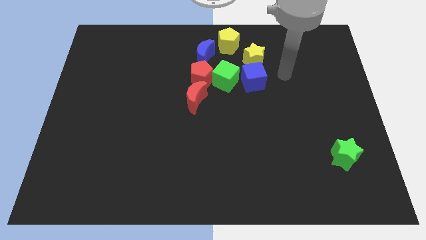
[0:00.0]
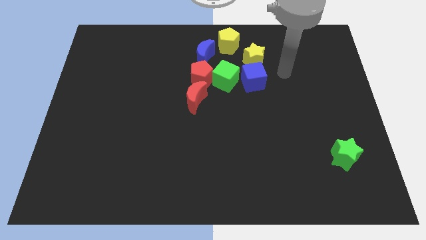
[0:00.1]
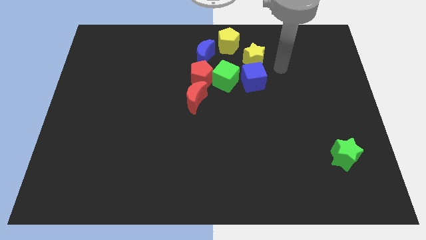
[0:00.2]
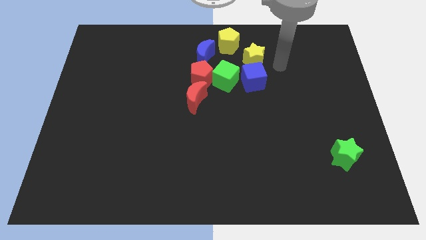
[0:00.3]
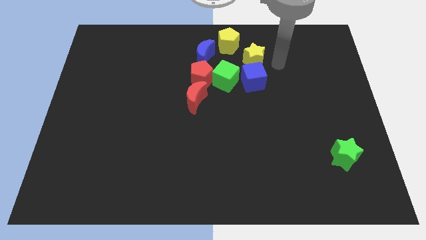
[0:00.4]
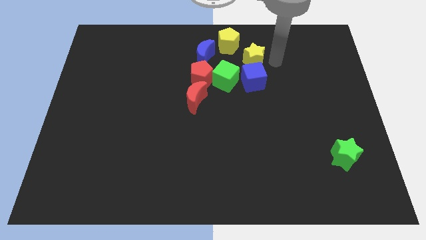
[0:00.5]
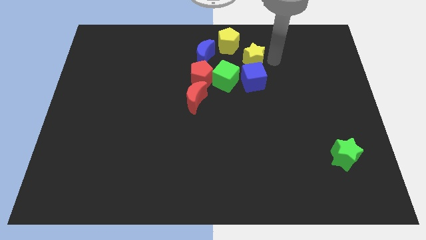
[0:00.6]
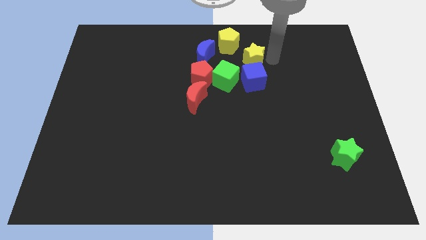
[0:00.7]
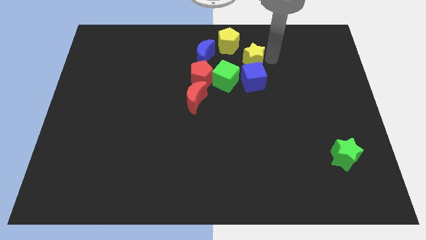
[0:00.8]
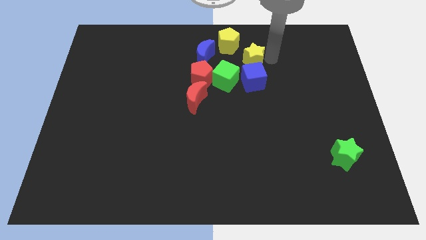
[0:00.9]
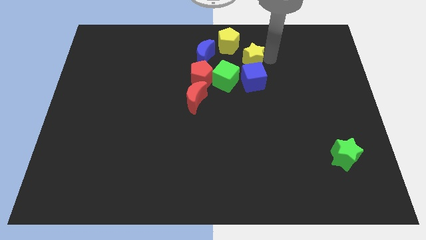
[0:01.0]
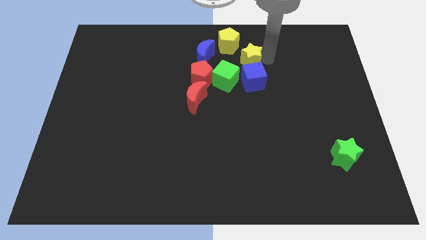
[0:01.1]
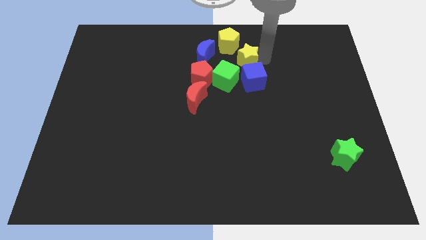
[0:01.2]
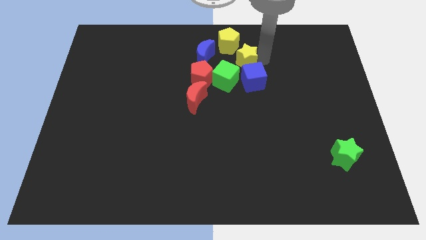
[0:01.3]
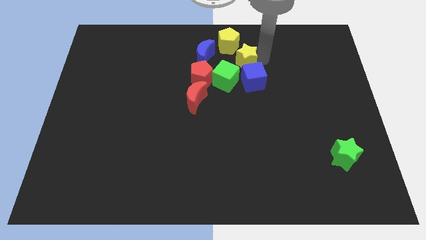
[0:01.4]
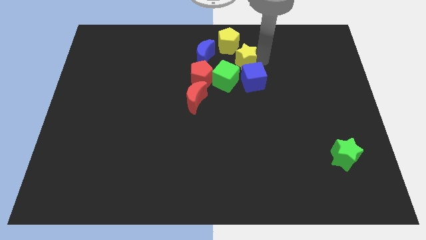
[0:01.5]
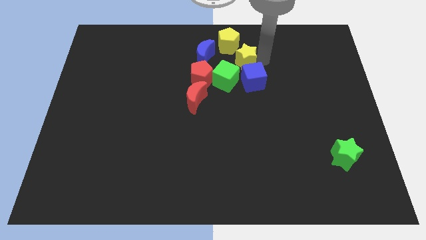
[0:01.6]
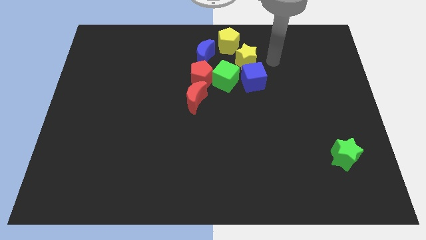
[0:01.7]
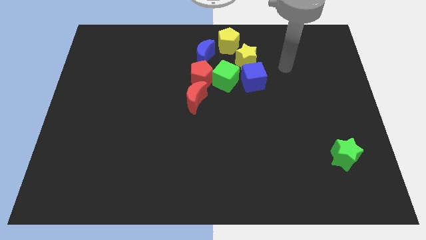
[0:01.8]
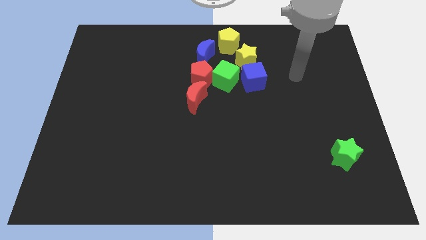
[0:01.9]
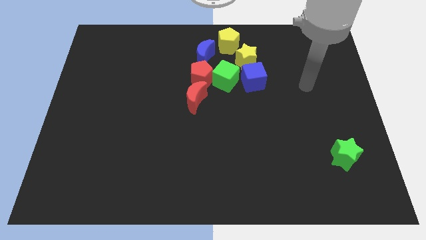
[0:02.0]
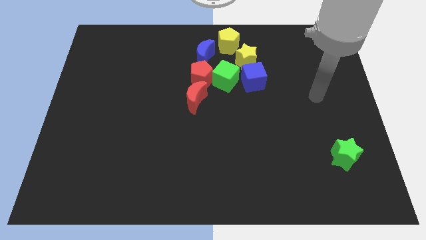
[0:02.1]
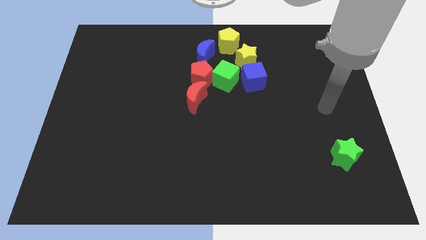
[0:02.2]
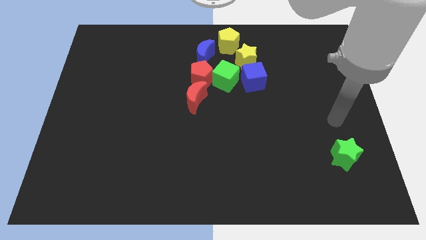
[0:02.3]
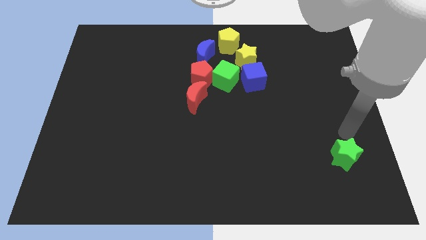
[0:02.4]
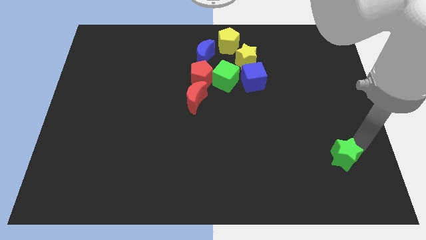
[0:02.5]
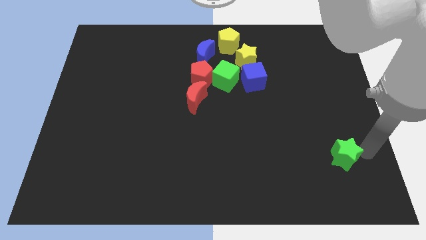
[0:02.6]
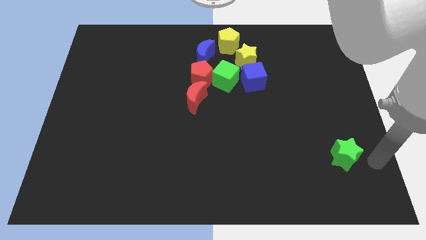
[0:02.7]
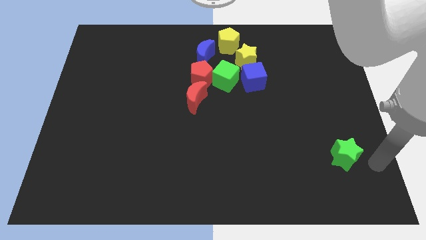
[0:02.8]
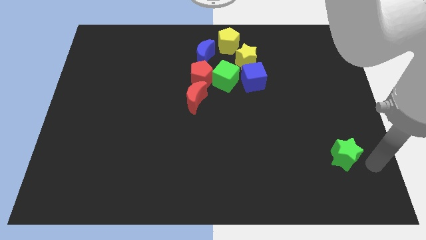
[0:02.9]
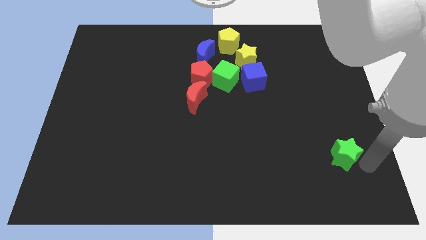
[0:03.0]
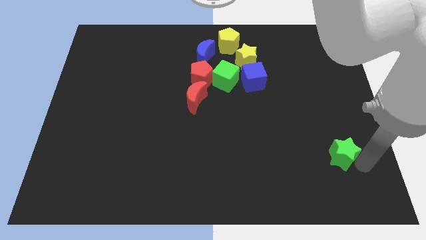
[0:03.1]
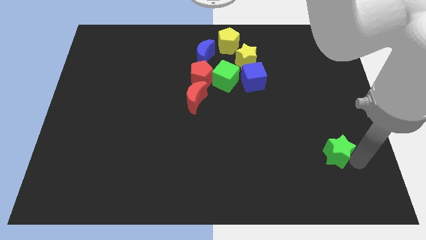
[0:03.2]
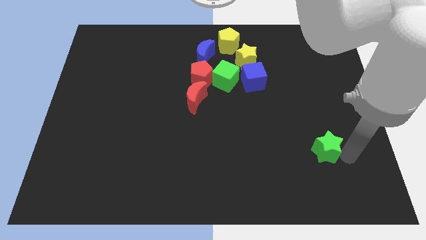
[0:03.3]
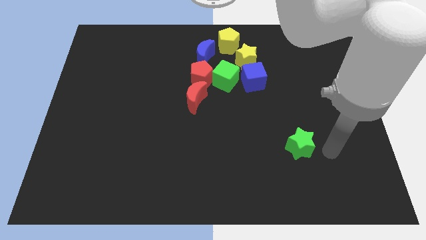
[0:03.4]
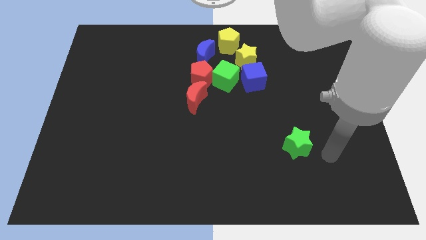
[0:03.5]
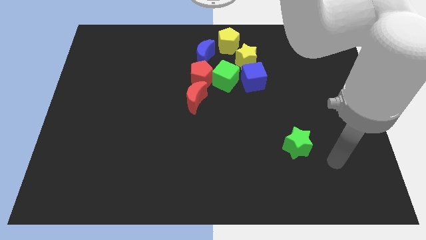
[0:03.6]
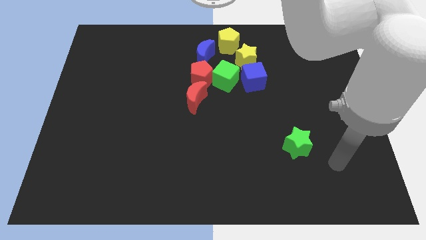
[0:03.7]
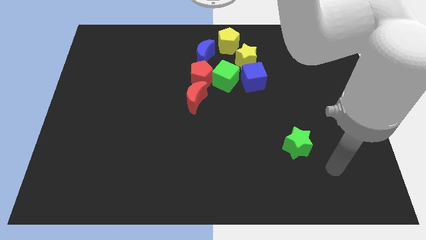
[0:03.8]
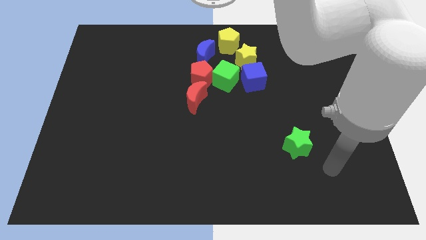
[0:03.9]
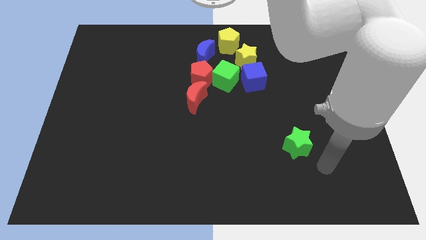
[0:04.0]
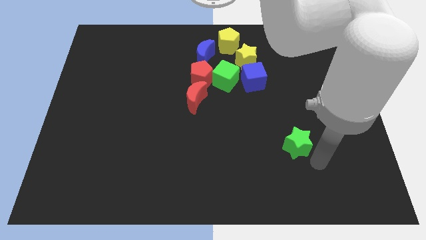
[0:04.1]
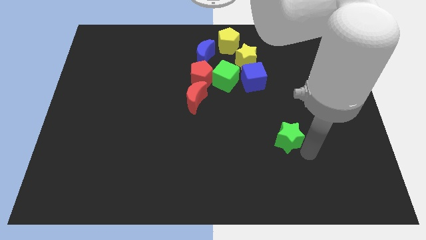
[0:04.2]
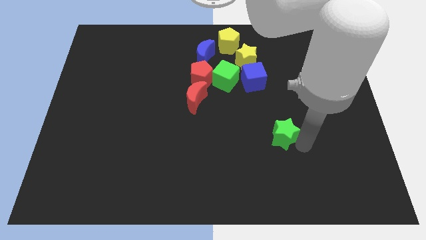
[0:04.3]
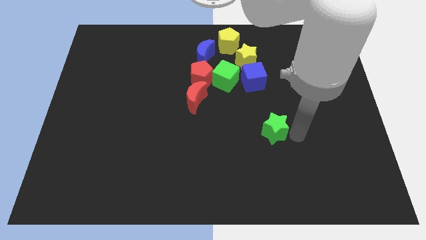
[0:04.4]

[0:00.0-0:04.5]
move the green star towards up

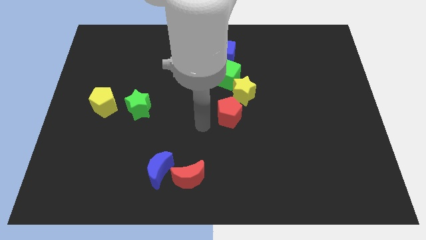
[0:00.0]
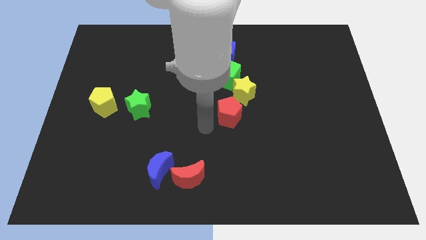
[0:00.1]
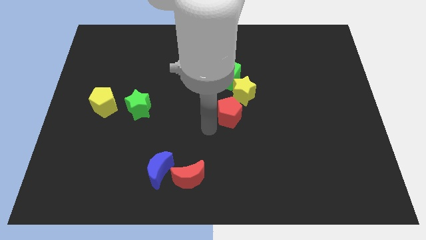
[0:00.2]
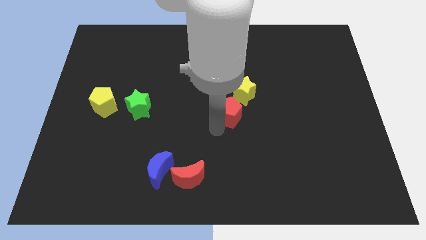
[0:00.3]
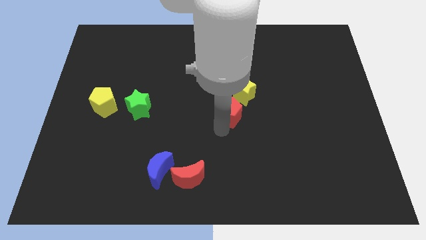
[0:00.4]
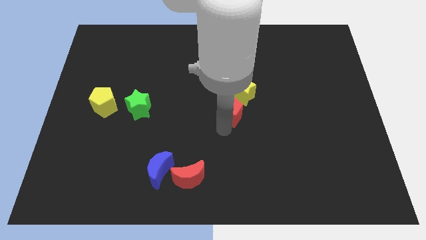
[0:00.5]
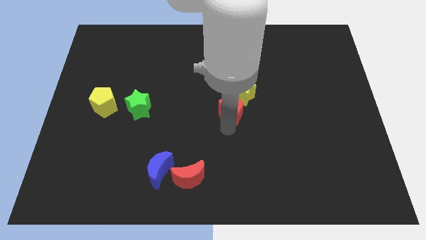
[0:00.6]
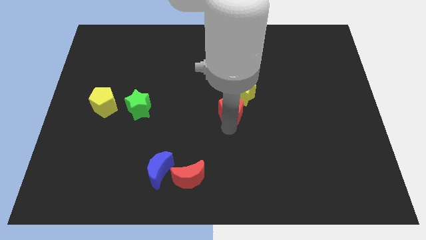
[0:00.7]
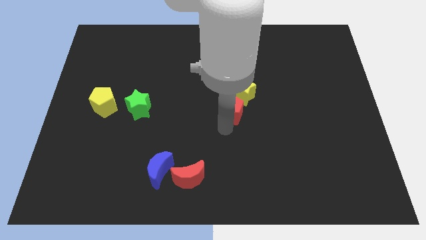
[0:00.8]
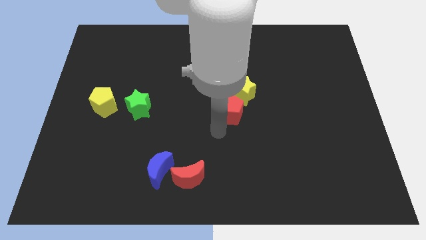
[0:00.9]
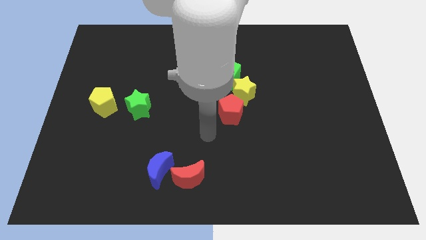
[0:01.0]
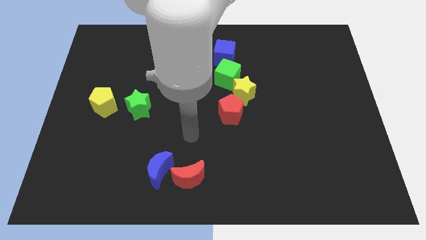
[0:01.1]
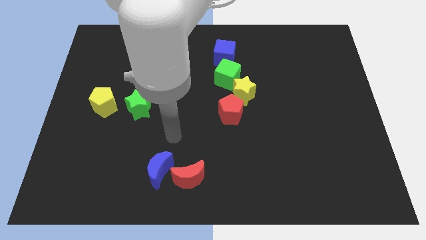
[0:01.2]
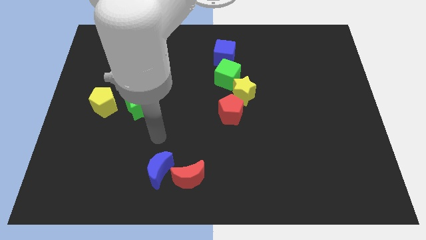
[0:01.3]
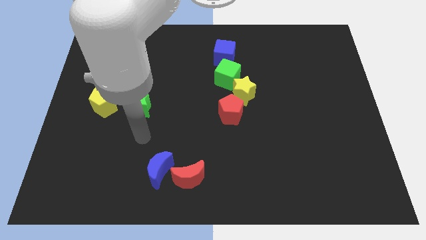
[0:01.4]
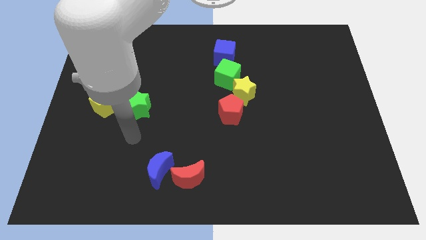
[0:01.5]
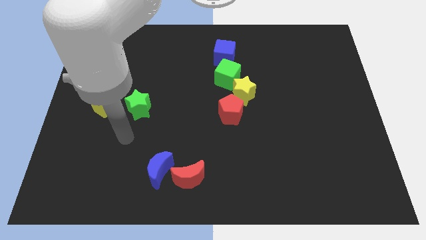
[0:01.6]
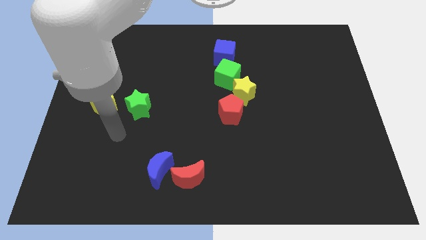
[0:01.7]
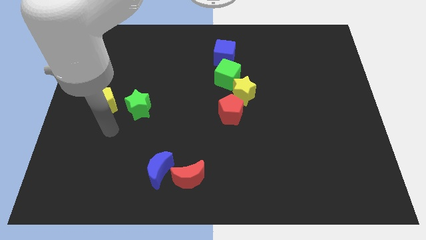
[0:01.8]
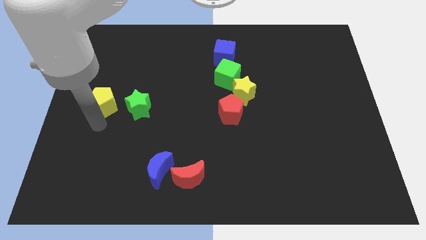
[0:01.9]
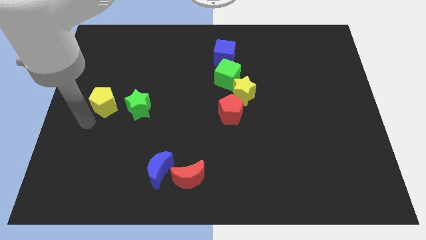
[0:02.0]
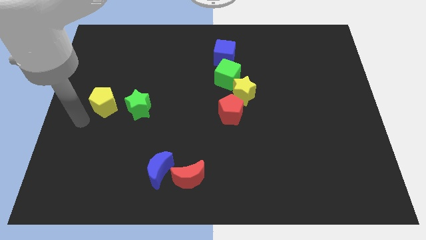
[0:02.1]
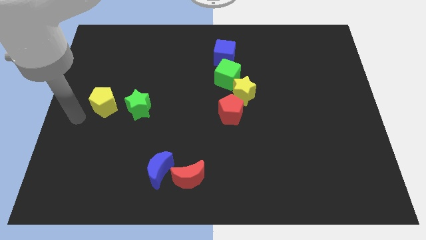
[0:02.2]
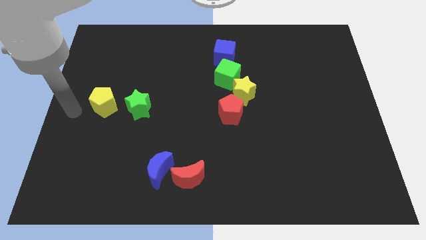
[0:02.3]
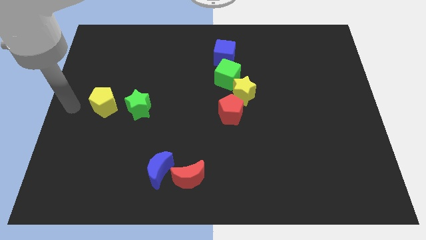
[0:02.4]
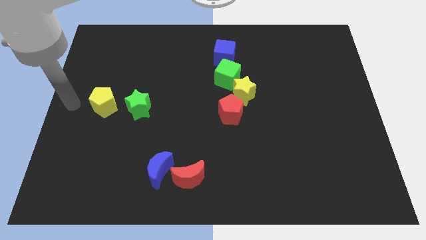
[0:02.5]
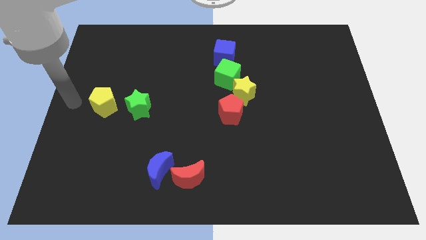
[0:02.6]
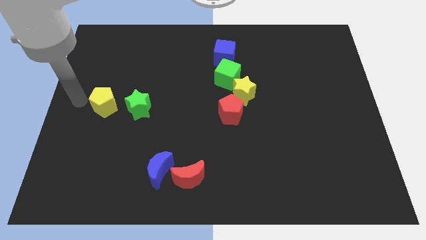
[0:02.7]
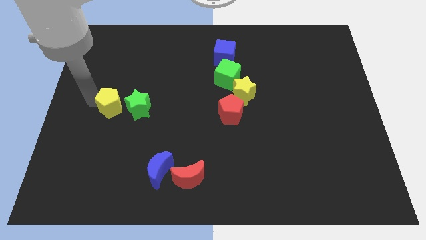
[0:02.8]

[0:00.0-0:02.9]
move your arm left to the yellow pentagon

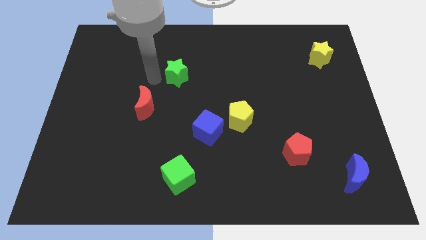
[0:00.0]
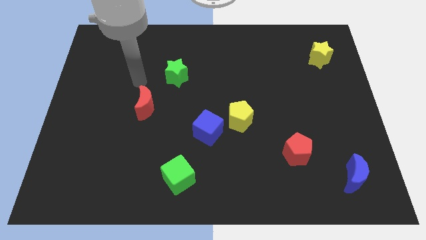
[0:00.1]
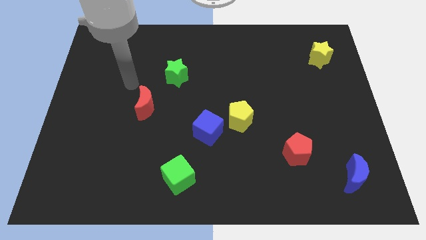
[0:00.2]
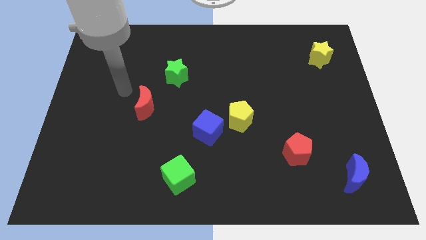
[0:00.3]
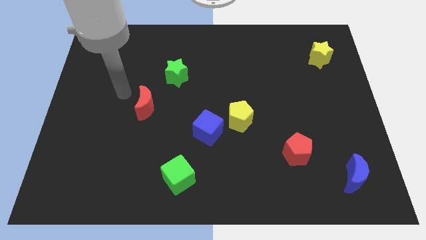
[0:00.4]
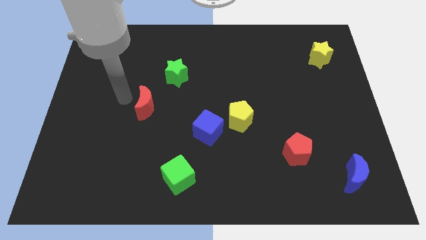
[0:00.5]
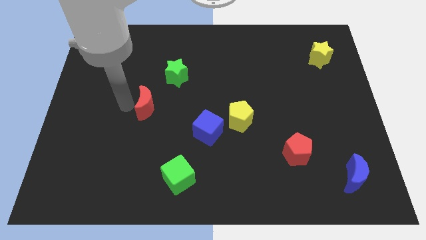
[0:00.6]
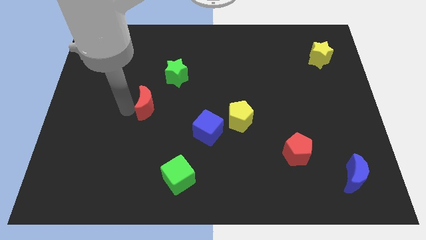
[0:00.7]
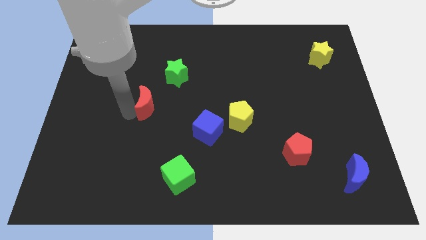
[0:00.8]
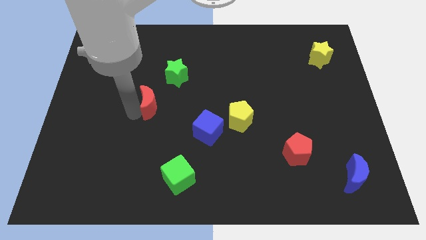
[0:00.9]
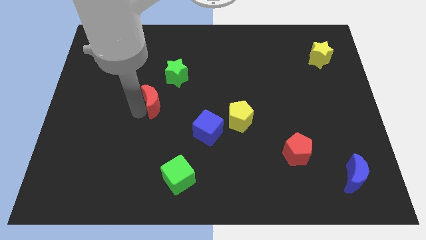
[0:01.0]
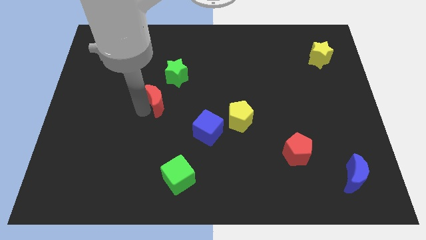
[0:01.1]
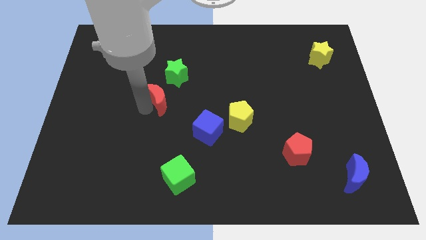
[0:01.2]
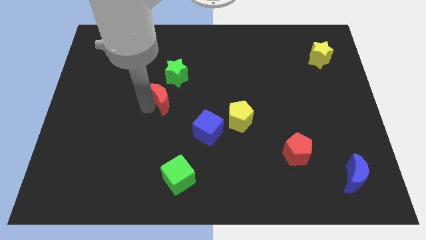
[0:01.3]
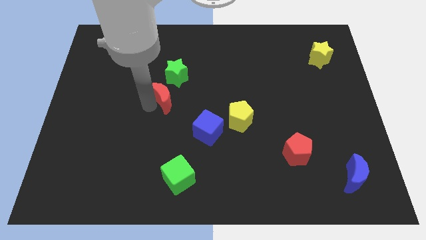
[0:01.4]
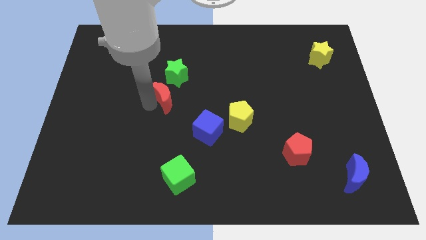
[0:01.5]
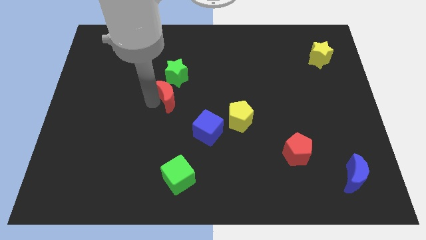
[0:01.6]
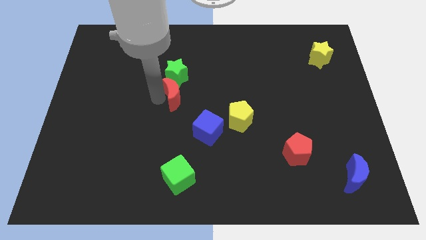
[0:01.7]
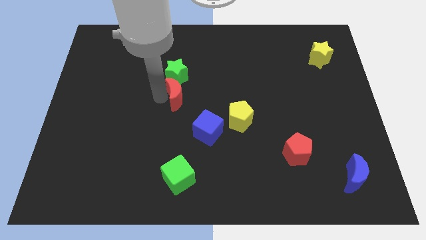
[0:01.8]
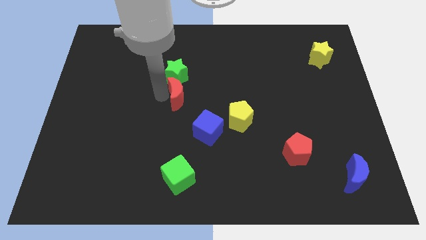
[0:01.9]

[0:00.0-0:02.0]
put the red moon underneath the green star
